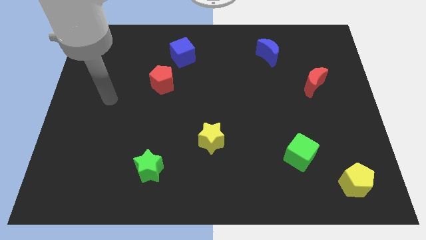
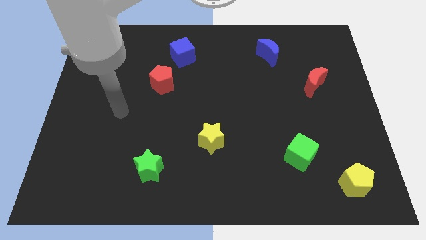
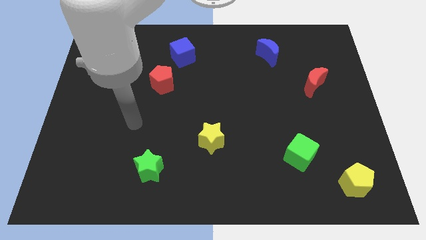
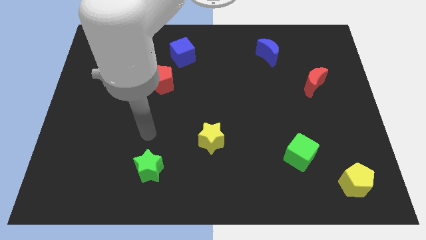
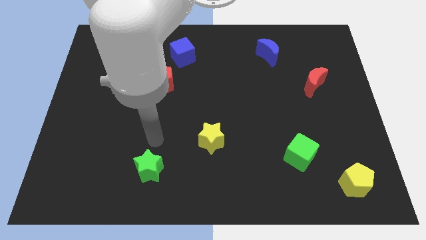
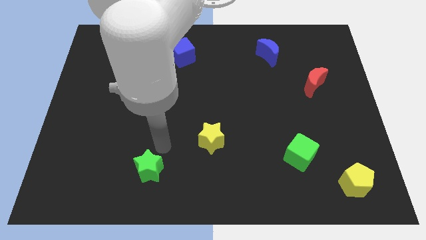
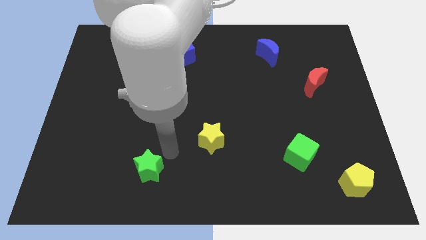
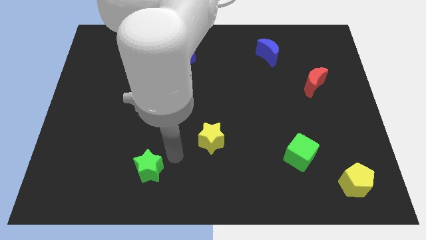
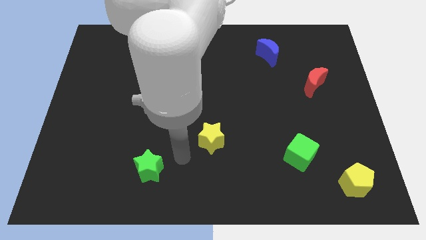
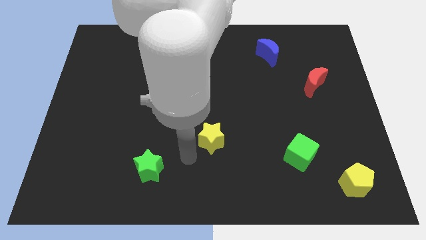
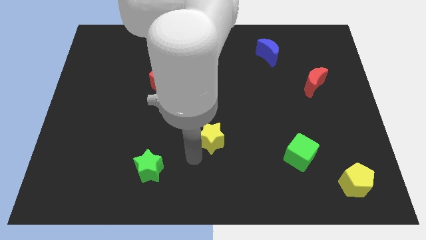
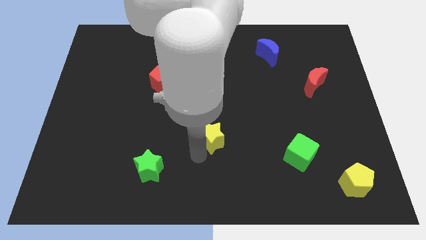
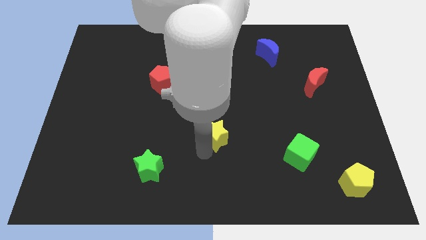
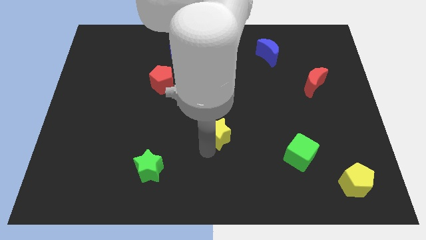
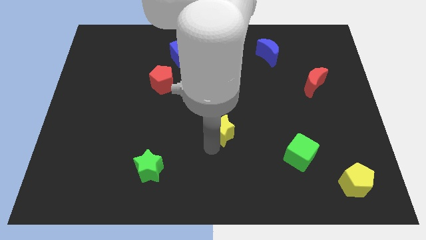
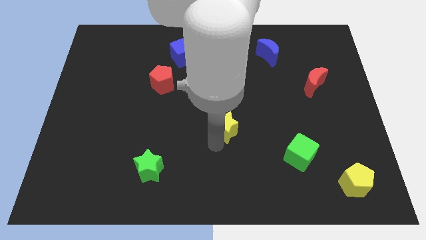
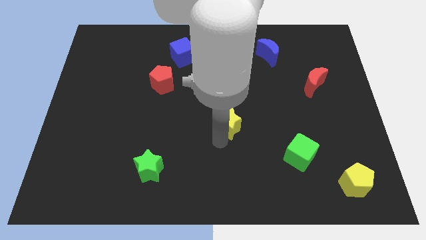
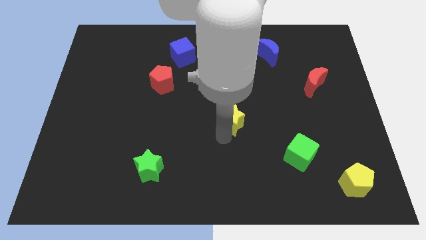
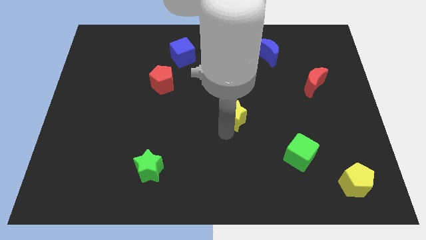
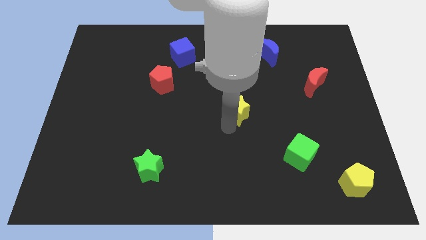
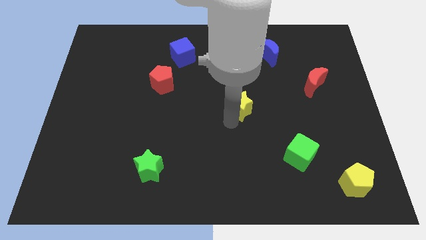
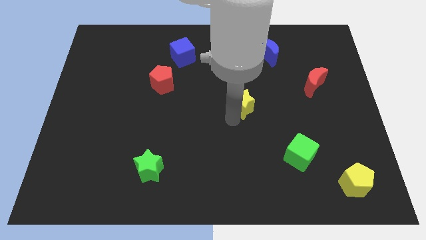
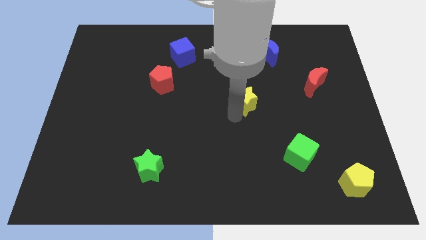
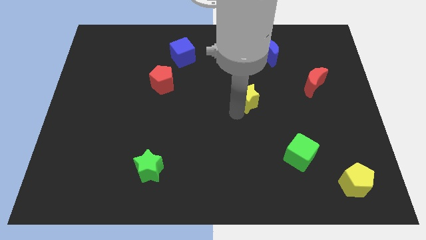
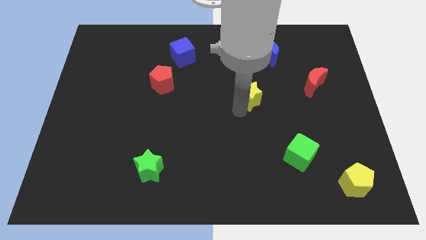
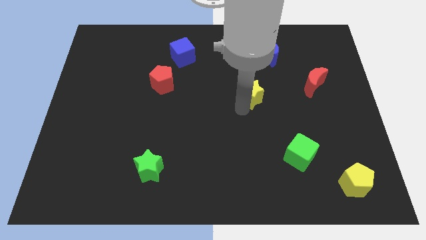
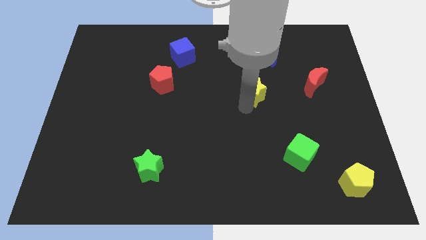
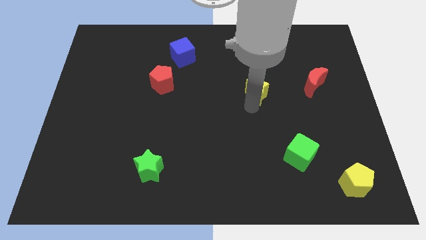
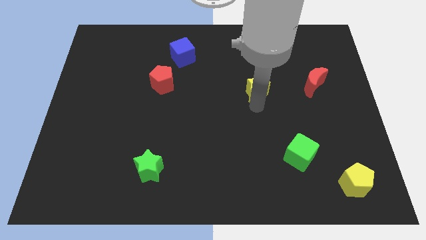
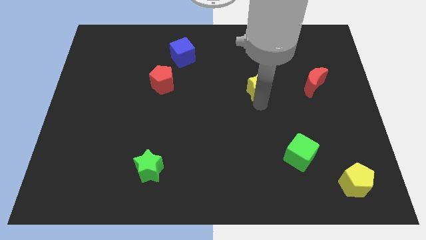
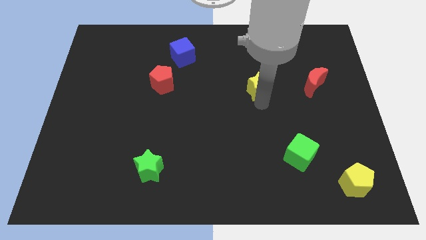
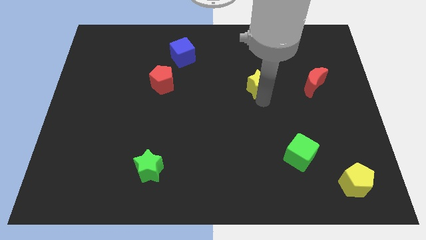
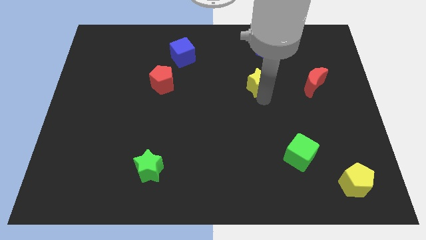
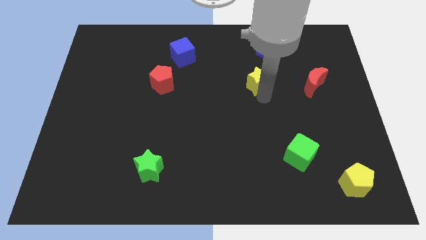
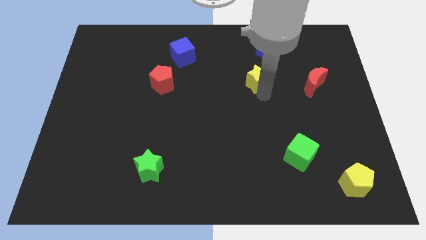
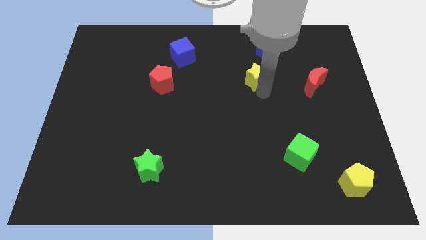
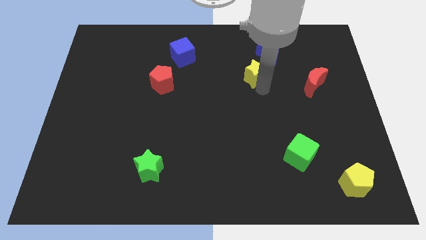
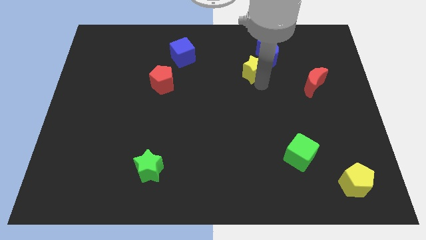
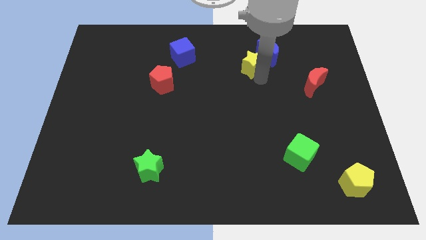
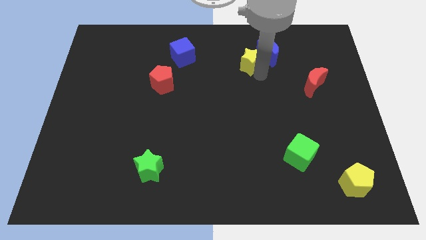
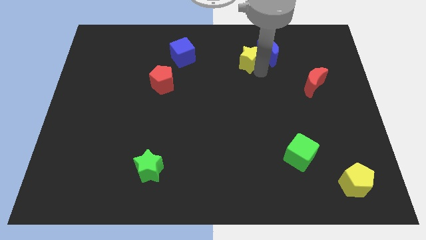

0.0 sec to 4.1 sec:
slide the yellow star towards the blue moon

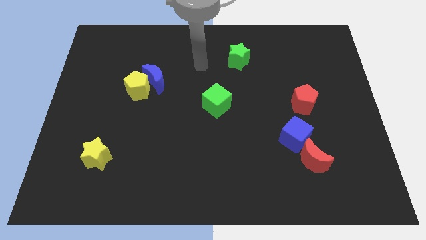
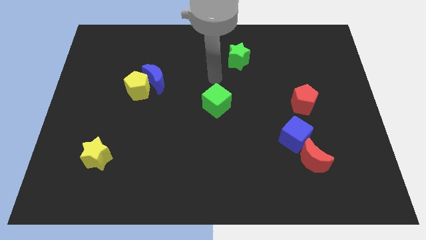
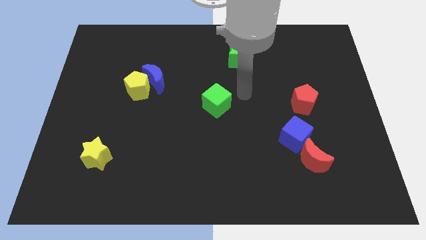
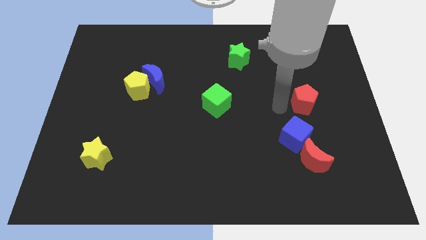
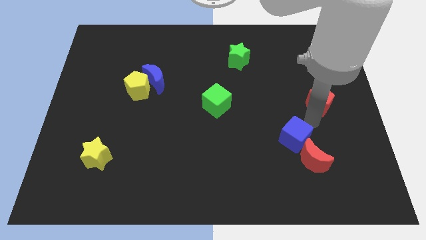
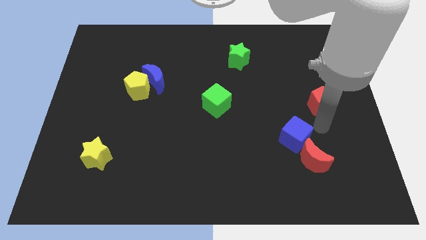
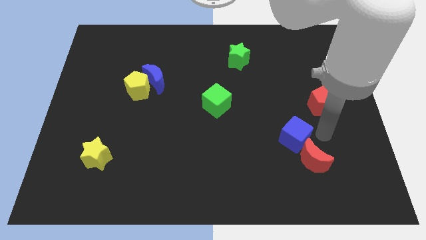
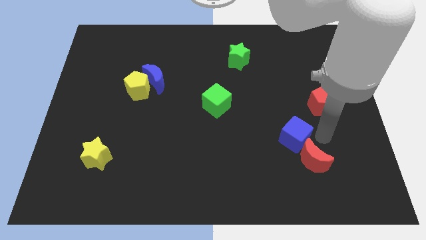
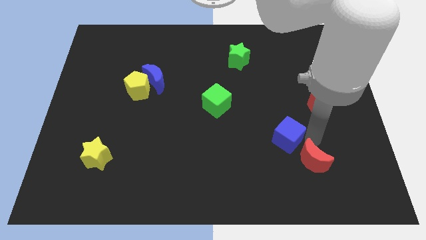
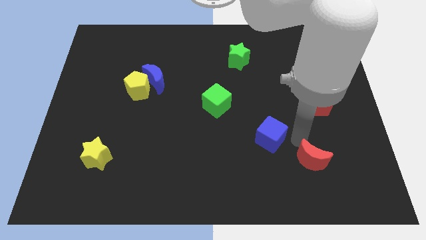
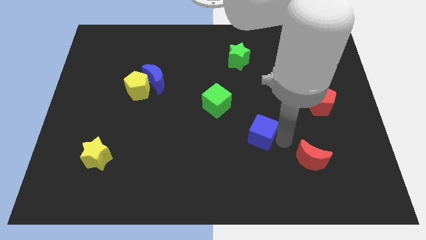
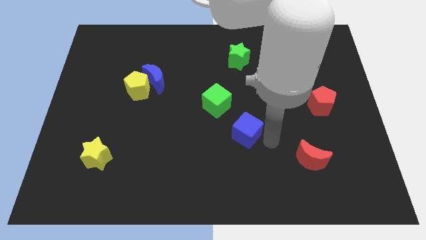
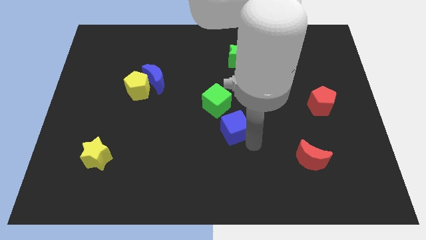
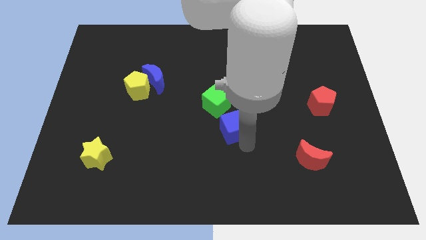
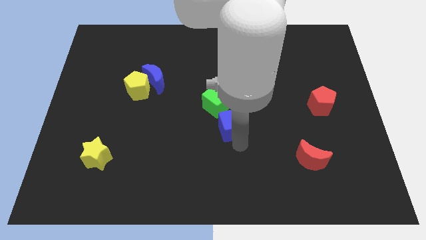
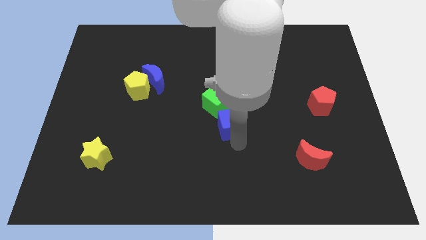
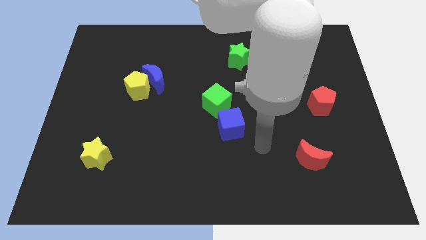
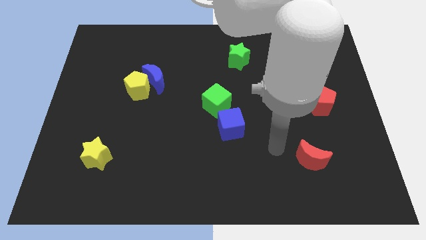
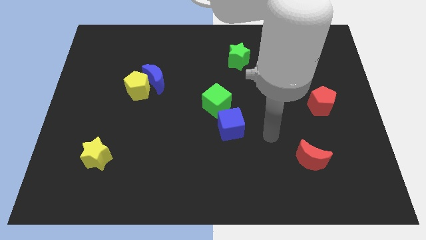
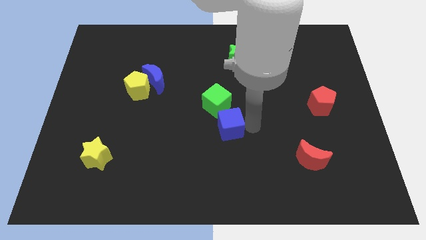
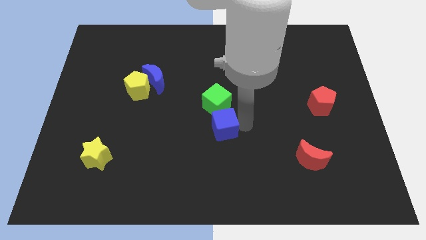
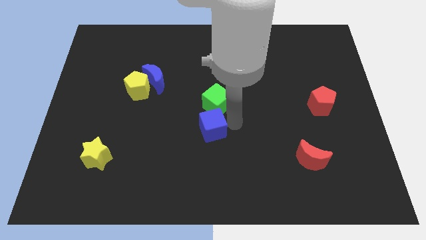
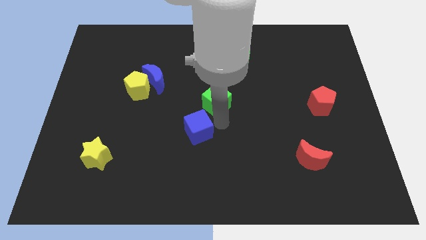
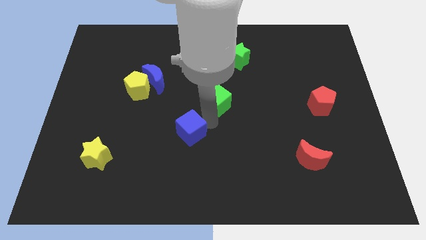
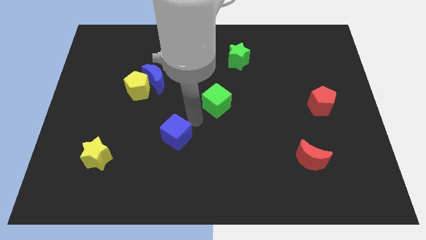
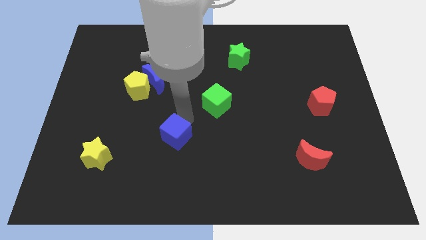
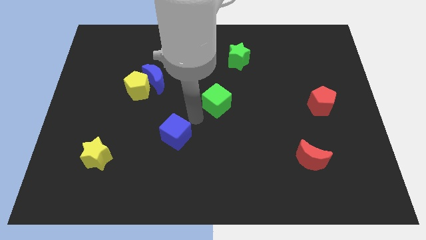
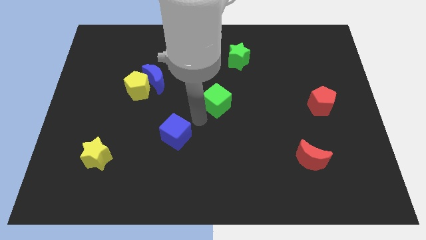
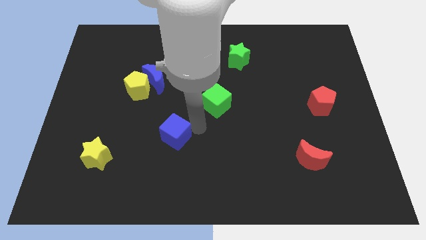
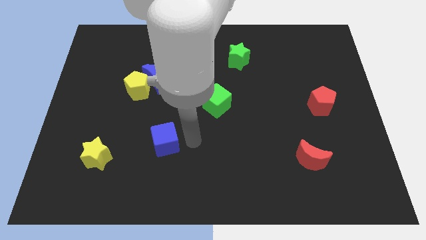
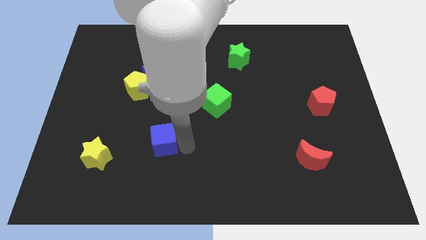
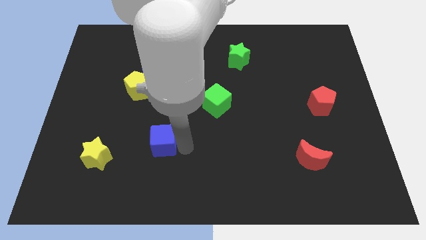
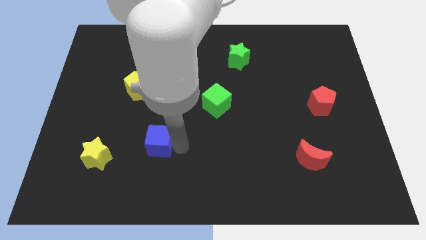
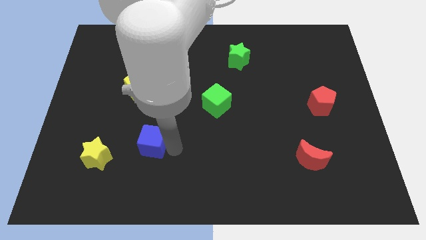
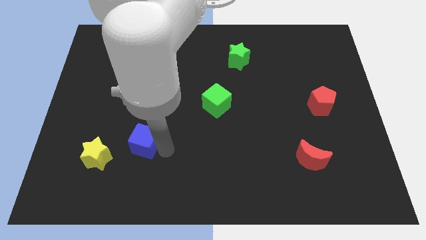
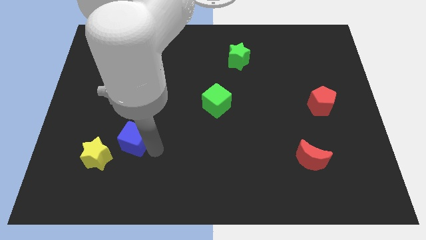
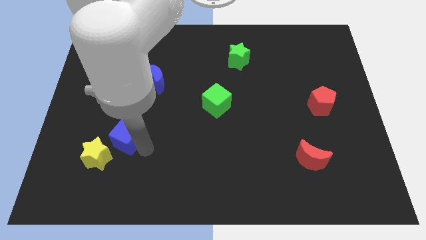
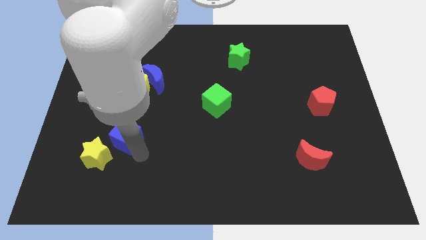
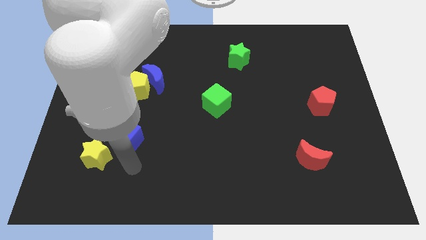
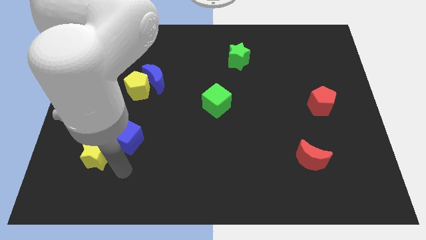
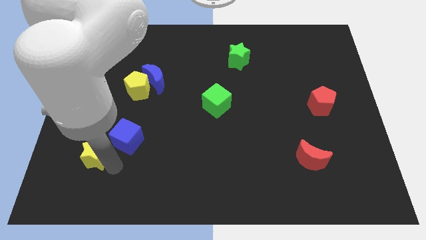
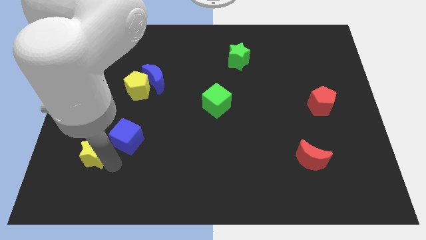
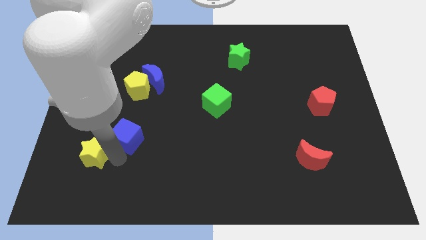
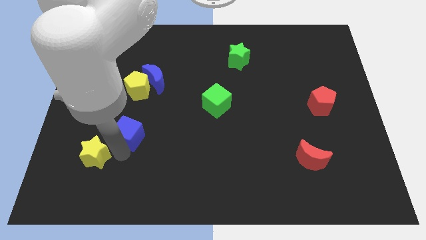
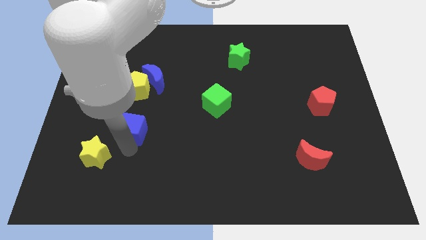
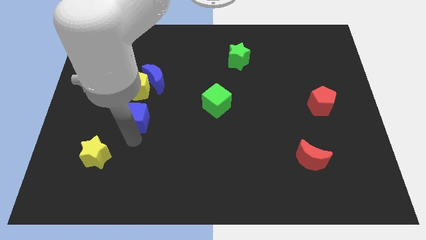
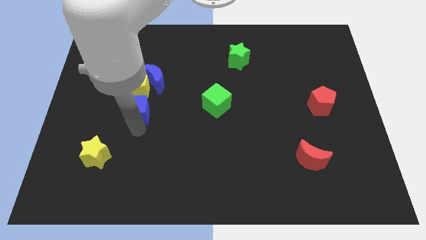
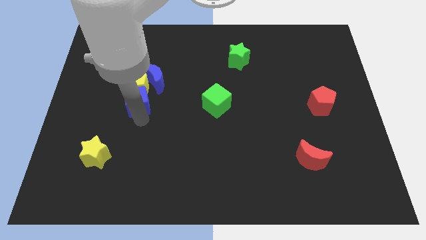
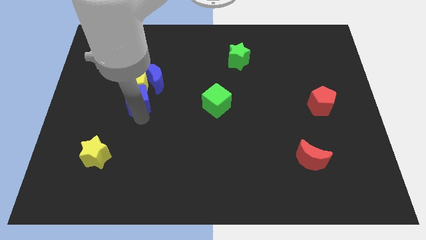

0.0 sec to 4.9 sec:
put the blue cube close to the yellow pentagon
